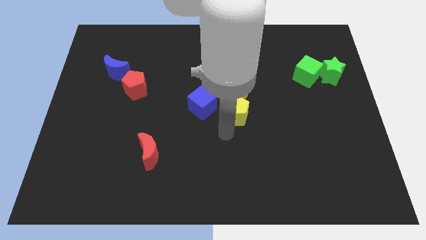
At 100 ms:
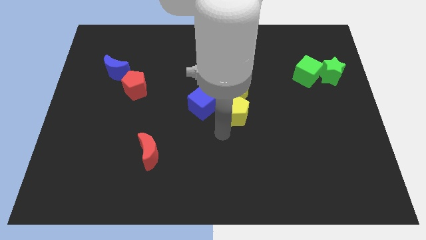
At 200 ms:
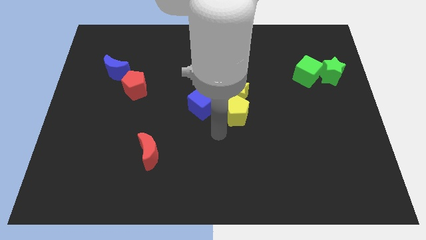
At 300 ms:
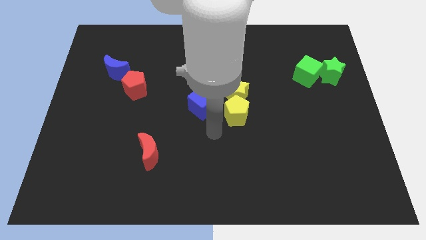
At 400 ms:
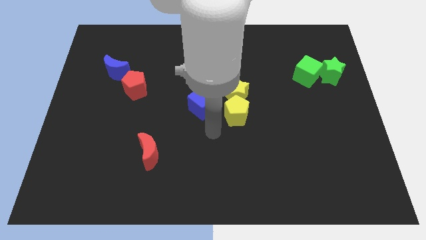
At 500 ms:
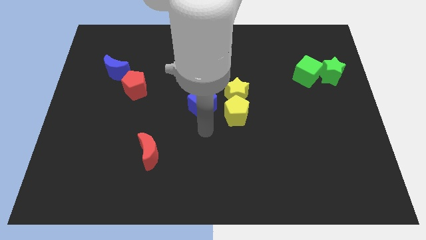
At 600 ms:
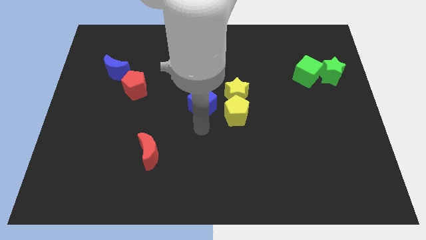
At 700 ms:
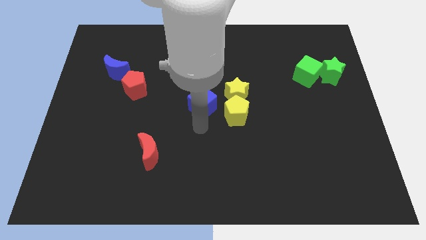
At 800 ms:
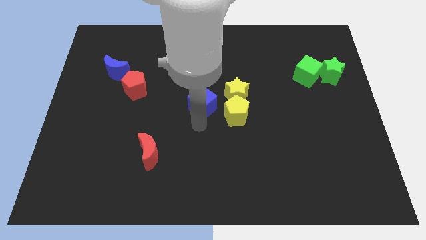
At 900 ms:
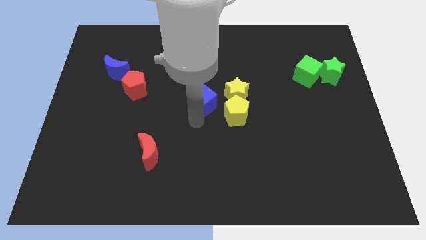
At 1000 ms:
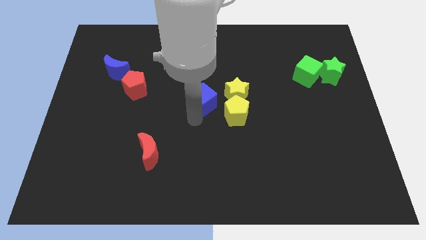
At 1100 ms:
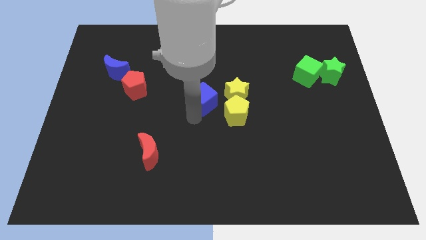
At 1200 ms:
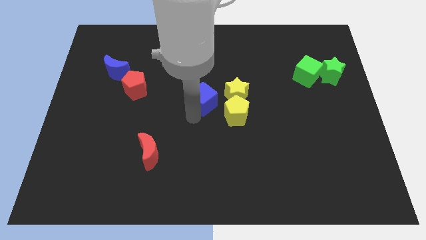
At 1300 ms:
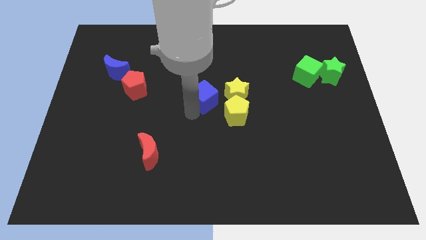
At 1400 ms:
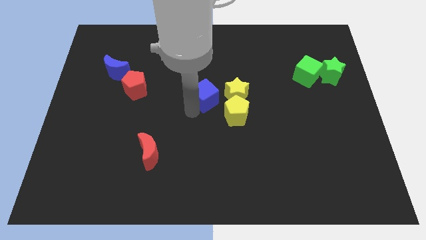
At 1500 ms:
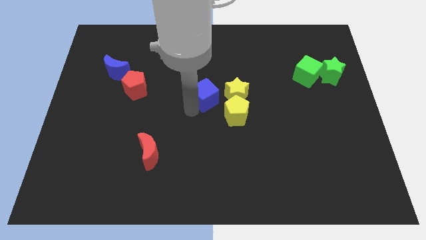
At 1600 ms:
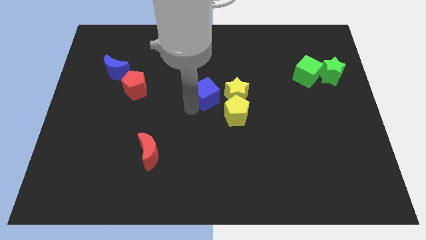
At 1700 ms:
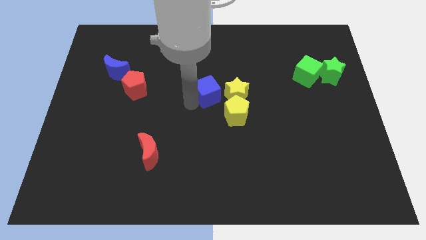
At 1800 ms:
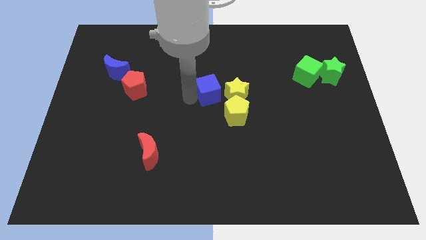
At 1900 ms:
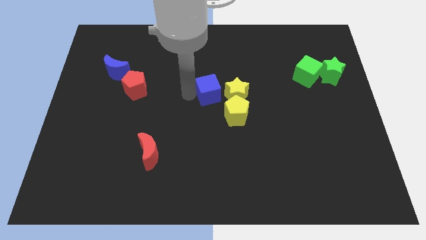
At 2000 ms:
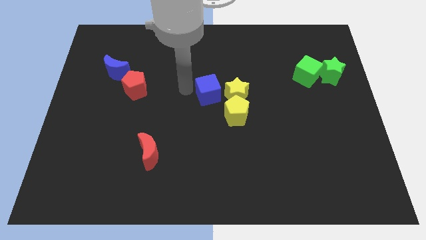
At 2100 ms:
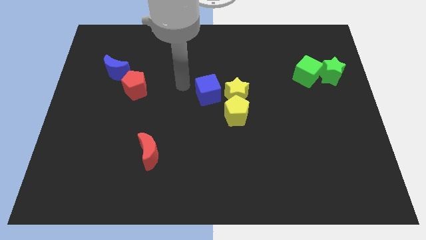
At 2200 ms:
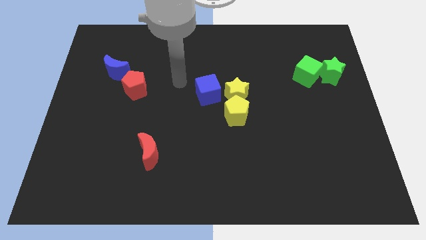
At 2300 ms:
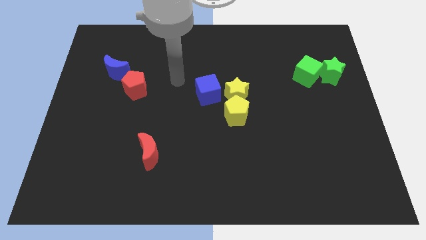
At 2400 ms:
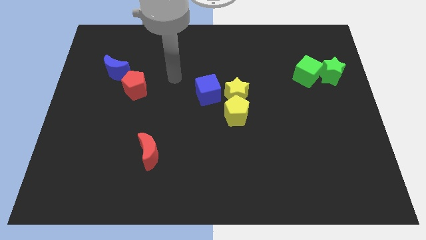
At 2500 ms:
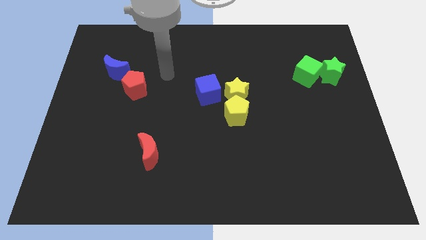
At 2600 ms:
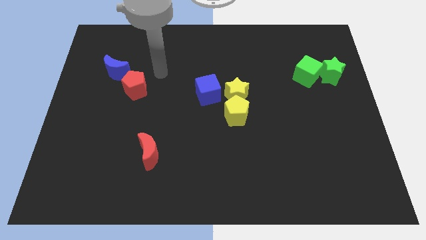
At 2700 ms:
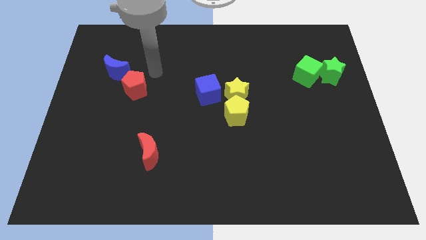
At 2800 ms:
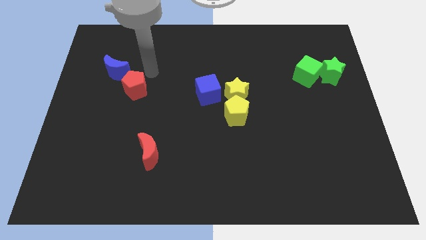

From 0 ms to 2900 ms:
place the blue cube left to the yellow star

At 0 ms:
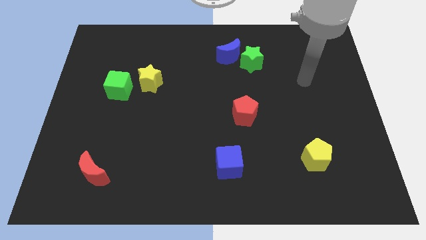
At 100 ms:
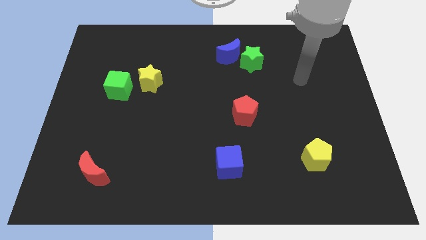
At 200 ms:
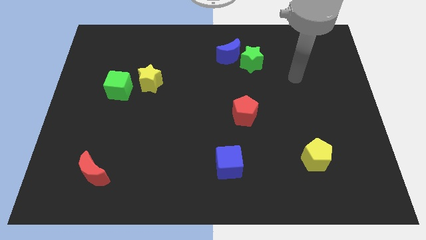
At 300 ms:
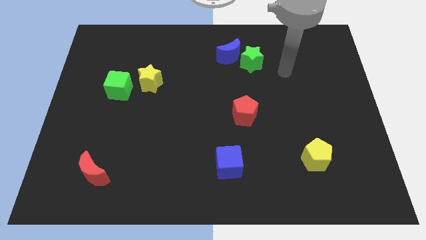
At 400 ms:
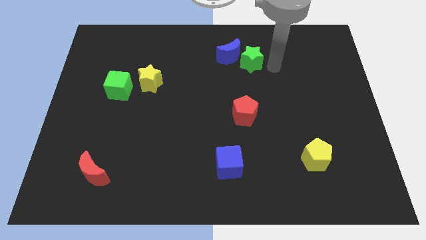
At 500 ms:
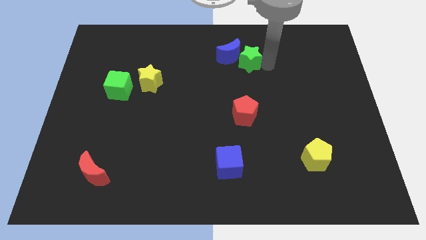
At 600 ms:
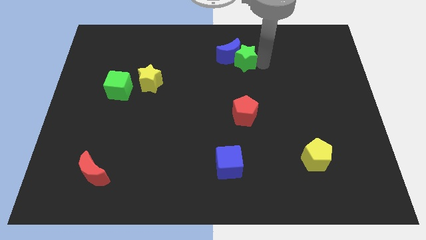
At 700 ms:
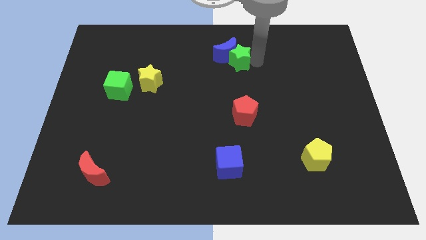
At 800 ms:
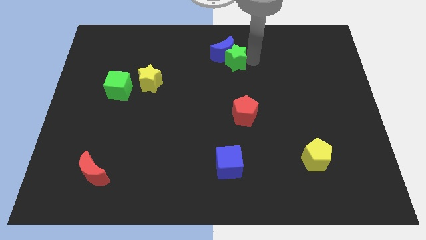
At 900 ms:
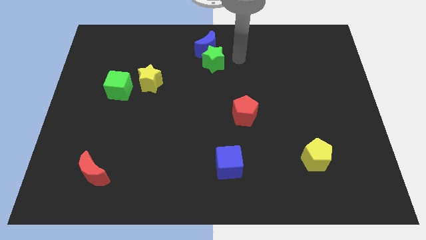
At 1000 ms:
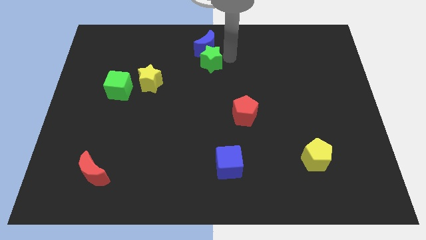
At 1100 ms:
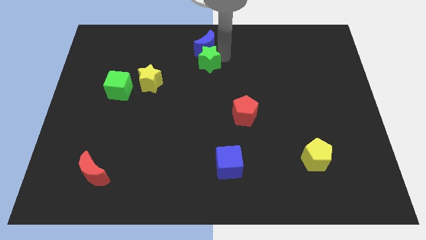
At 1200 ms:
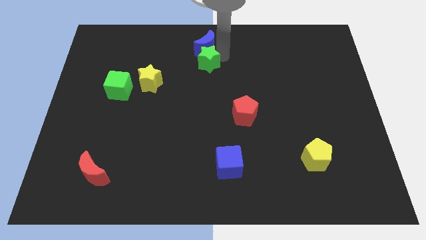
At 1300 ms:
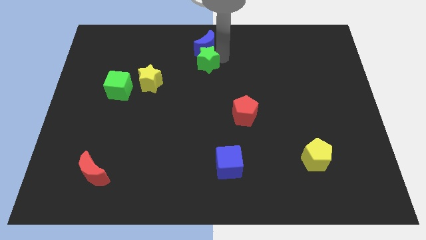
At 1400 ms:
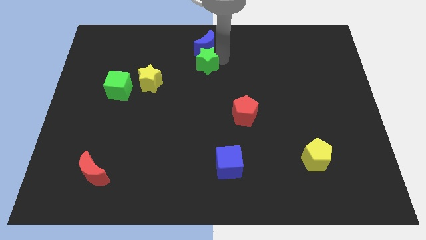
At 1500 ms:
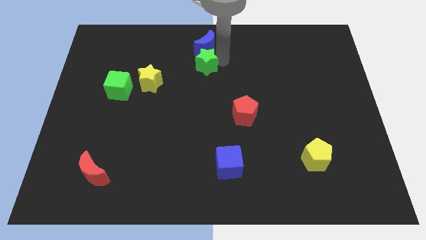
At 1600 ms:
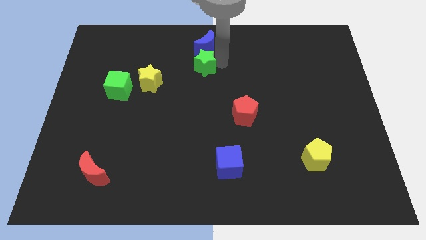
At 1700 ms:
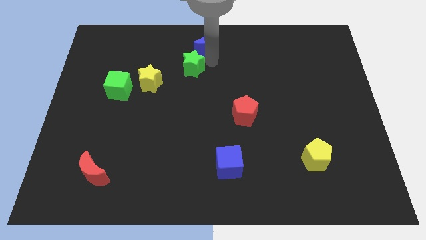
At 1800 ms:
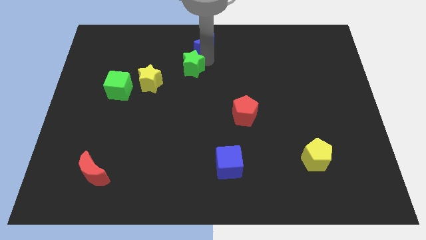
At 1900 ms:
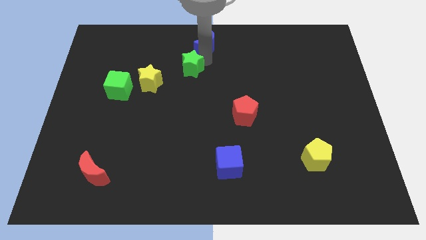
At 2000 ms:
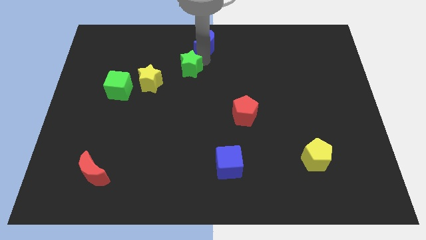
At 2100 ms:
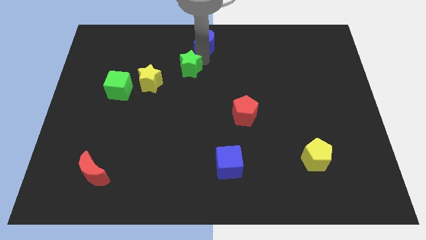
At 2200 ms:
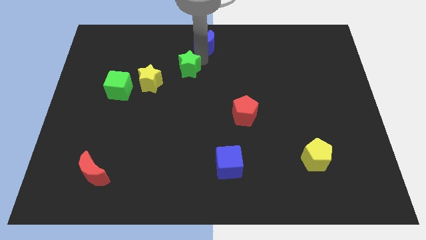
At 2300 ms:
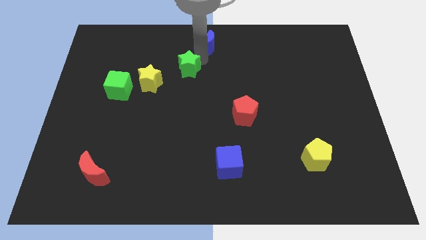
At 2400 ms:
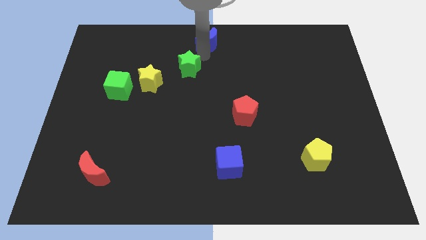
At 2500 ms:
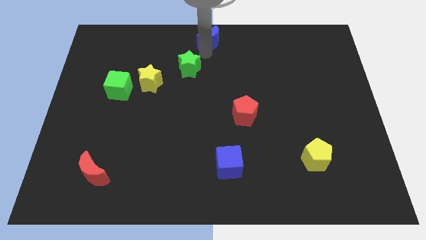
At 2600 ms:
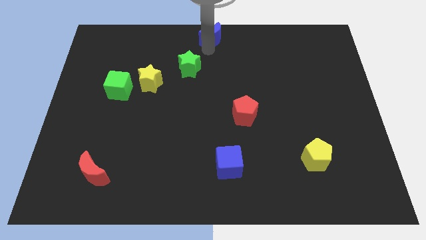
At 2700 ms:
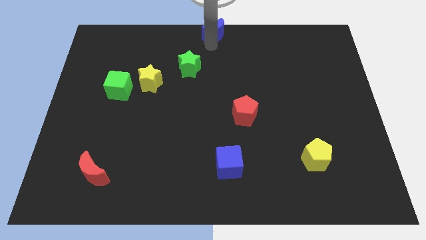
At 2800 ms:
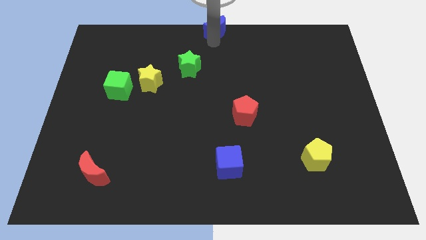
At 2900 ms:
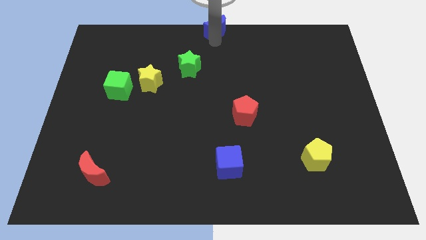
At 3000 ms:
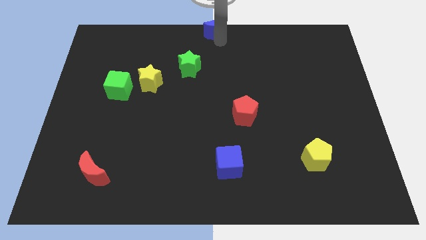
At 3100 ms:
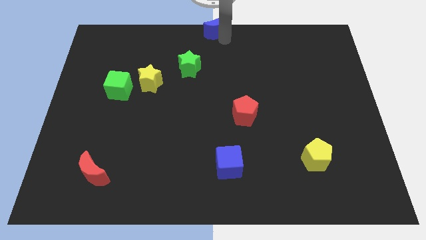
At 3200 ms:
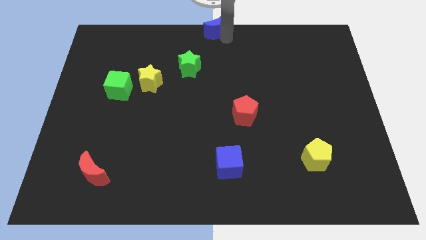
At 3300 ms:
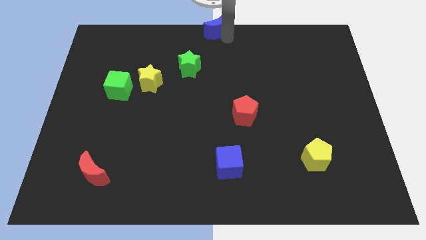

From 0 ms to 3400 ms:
separate the green star and blue moon

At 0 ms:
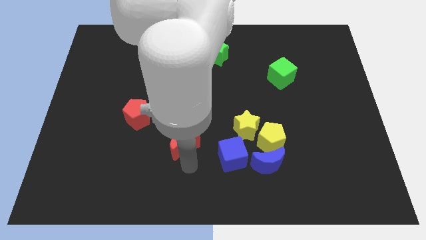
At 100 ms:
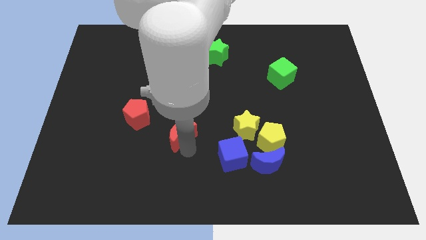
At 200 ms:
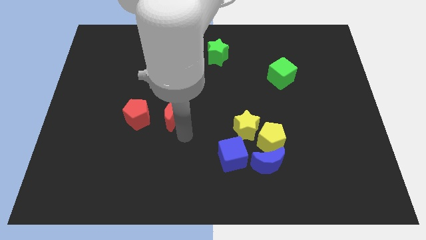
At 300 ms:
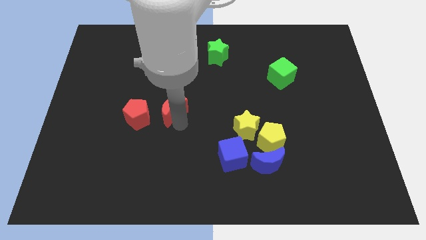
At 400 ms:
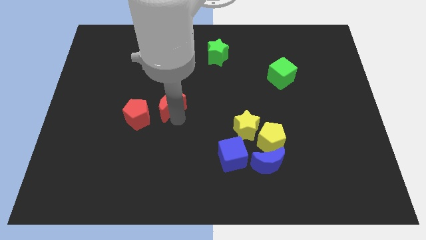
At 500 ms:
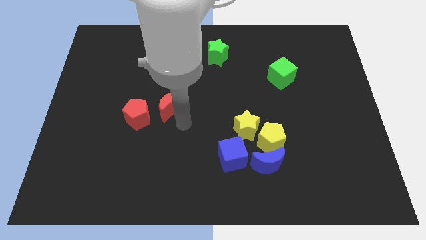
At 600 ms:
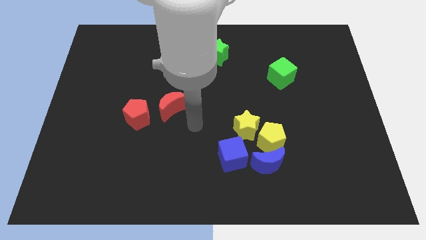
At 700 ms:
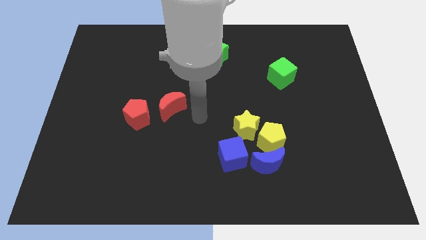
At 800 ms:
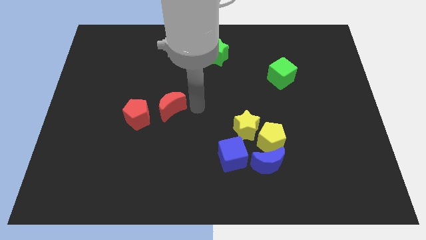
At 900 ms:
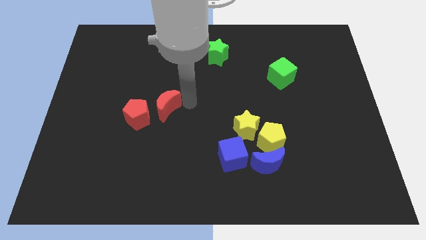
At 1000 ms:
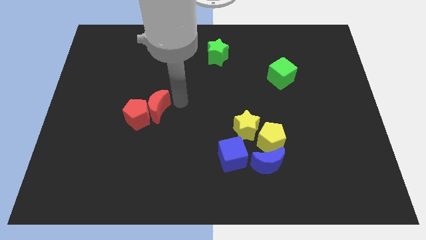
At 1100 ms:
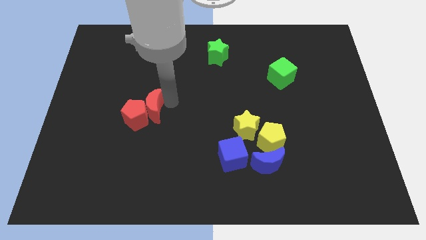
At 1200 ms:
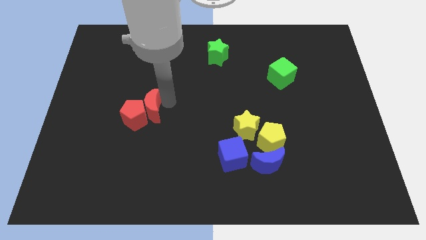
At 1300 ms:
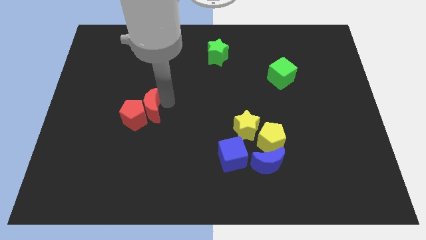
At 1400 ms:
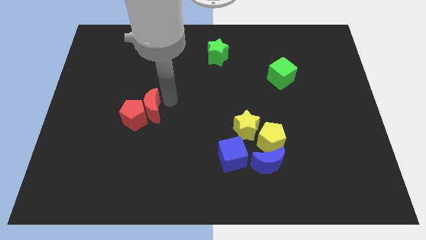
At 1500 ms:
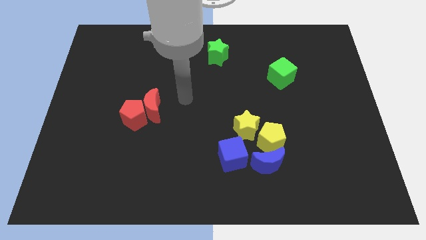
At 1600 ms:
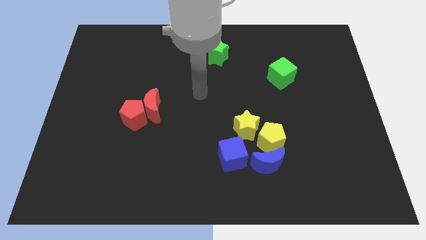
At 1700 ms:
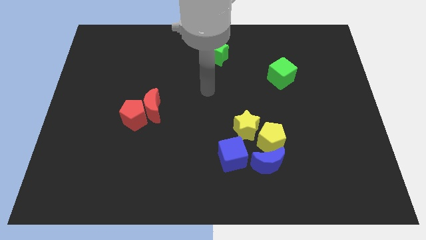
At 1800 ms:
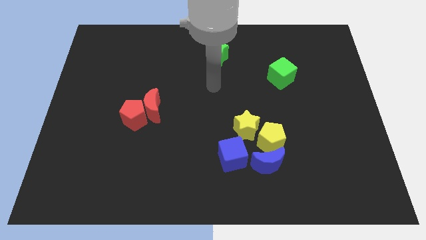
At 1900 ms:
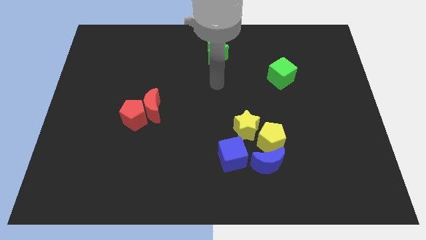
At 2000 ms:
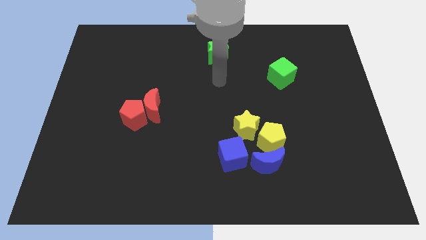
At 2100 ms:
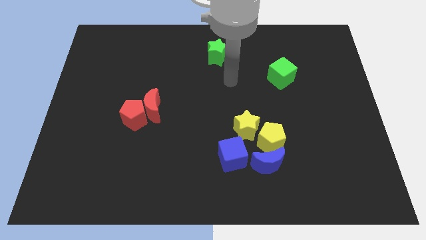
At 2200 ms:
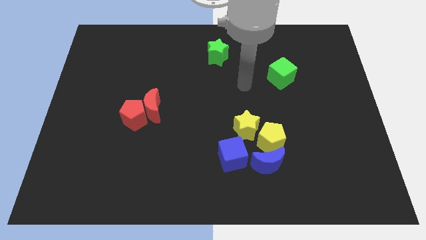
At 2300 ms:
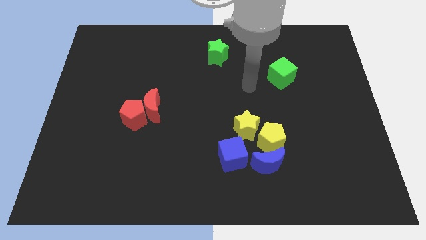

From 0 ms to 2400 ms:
move the red blocks slightly to the left

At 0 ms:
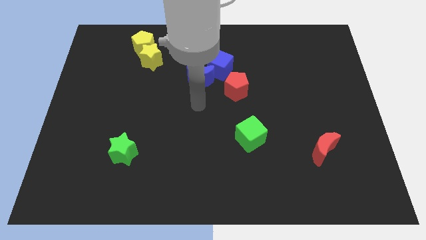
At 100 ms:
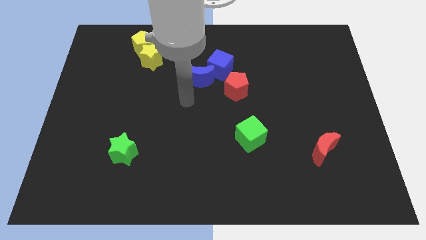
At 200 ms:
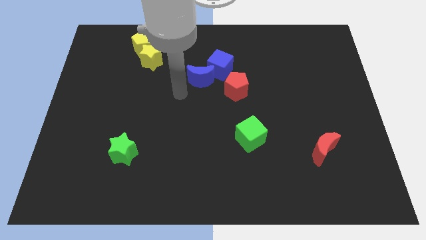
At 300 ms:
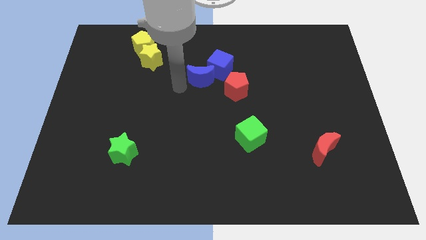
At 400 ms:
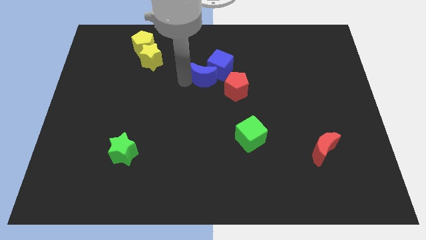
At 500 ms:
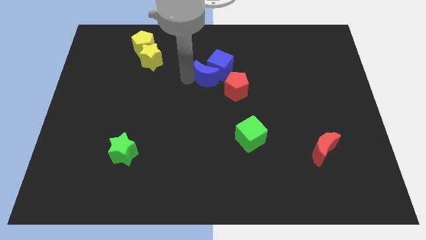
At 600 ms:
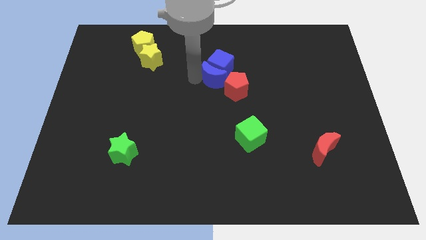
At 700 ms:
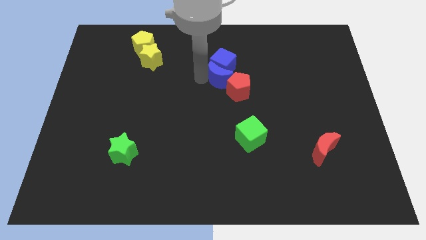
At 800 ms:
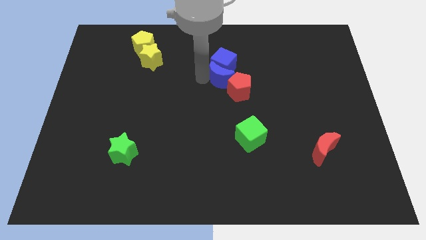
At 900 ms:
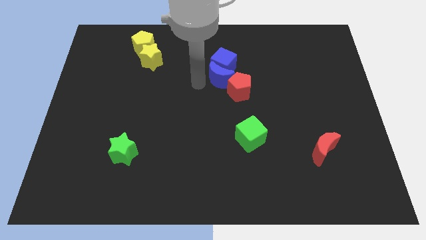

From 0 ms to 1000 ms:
move blue moon into the red pentagon
